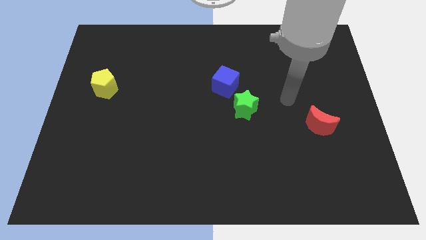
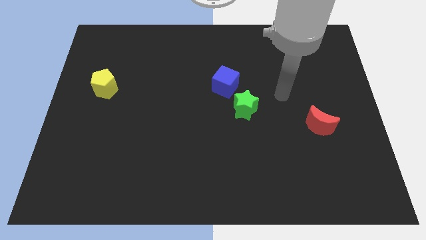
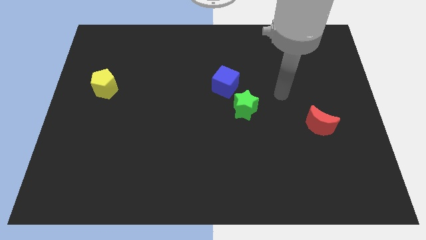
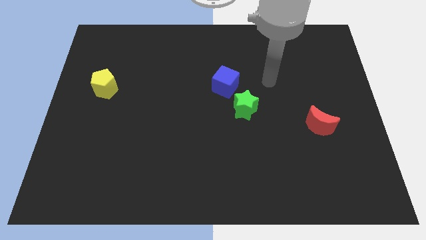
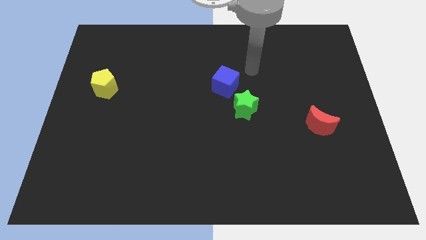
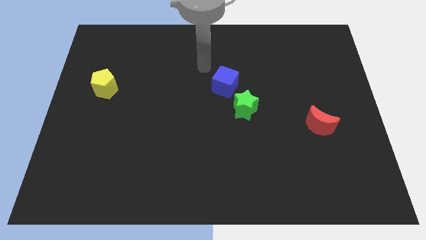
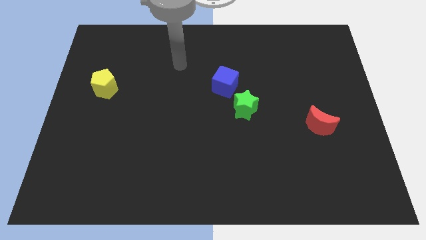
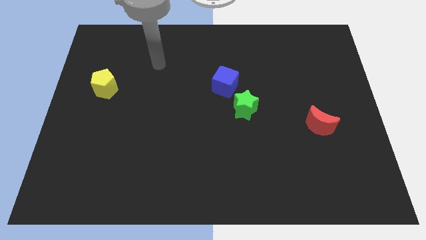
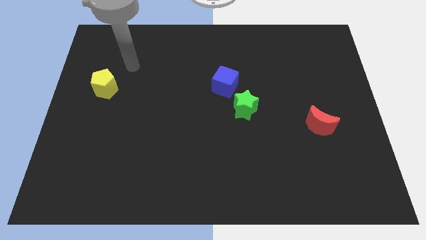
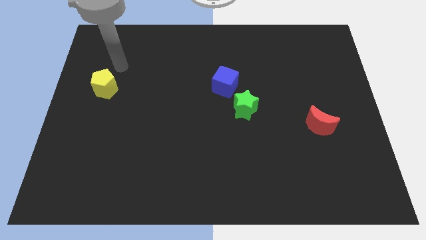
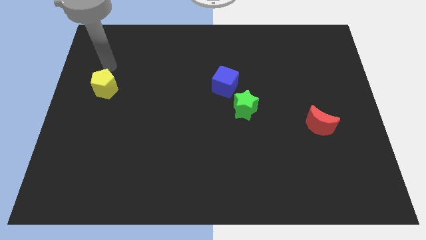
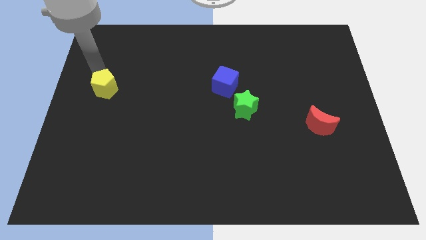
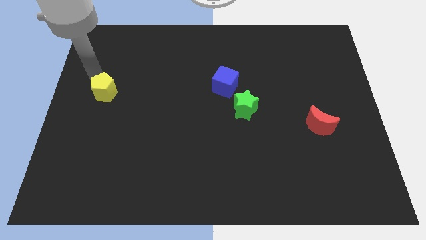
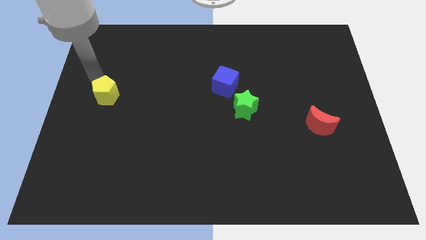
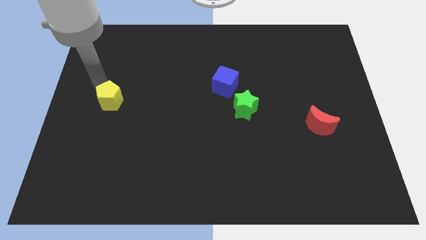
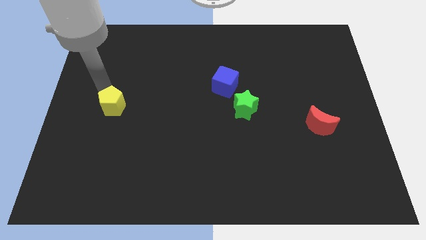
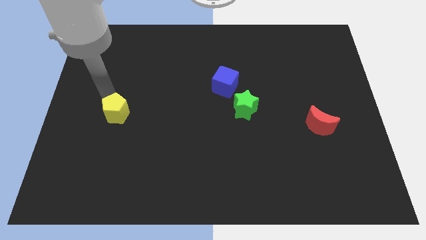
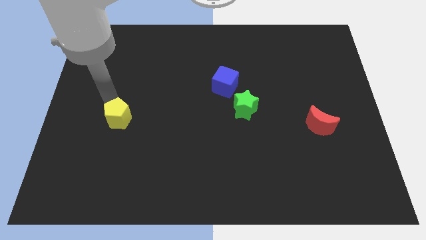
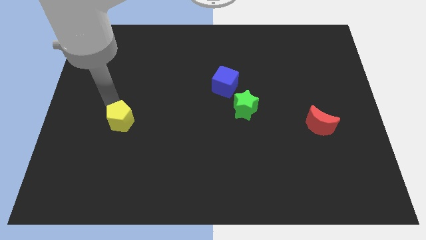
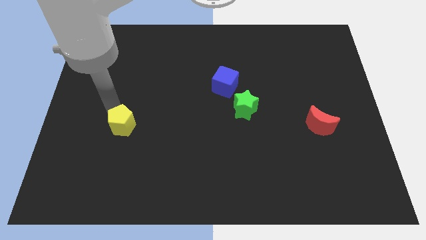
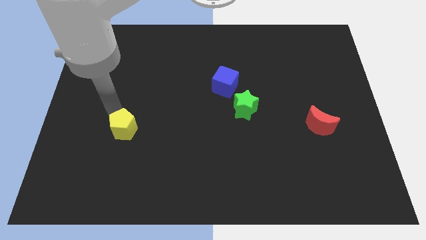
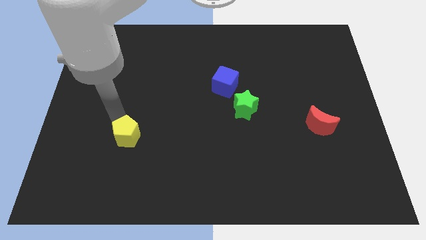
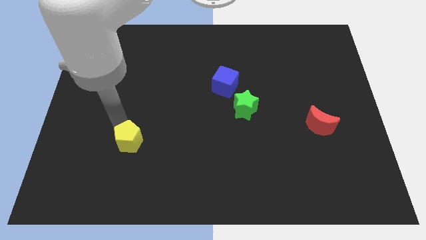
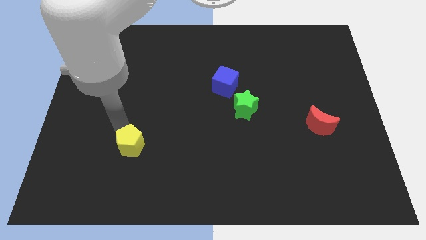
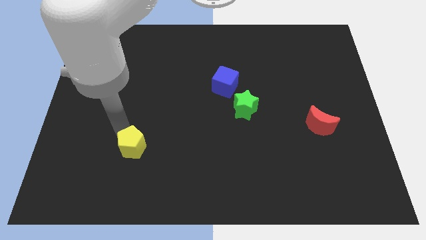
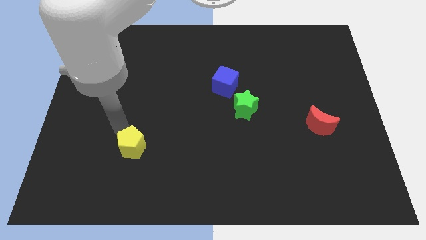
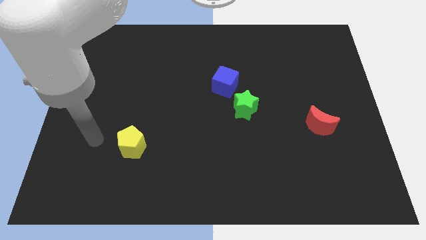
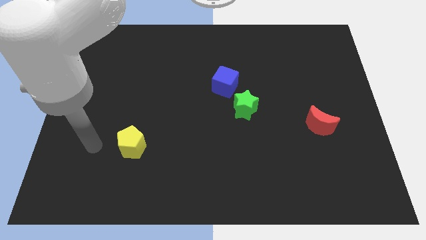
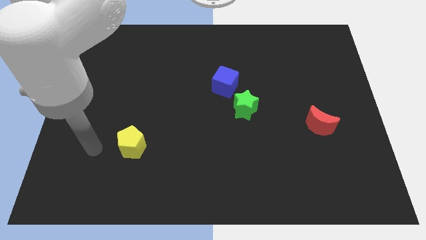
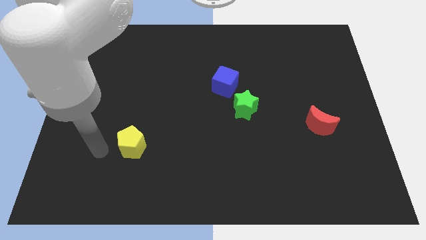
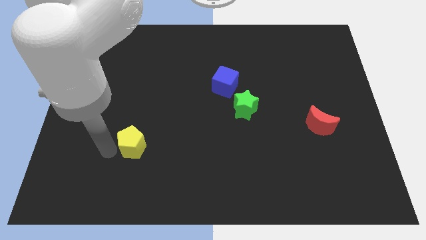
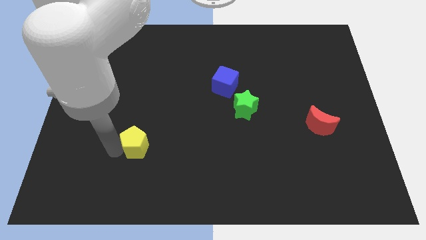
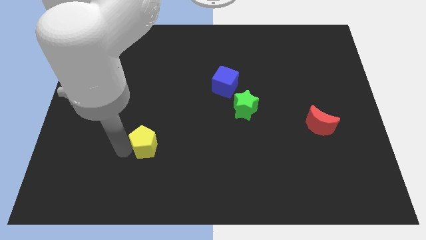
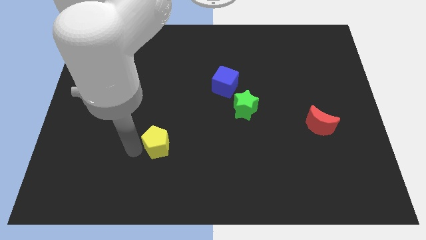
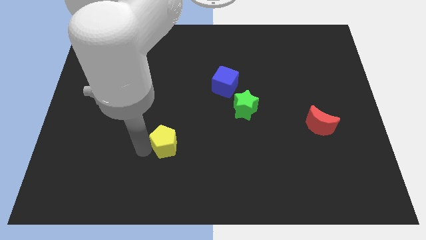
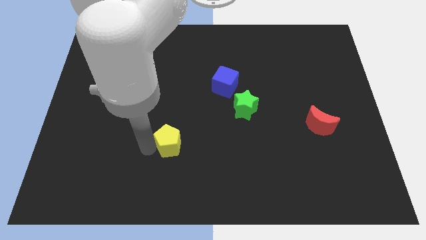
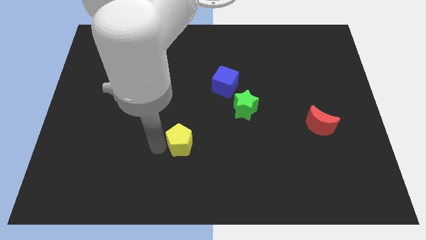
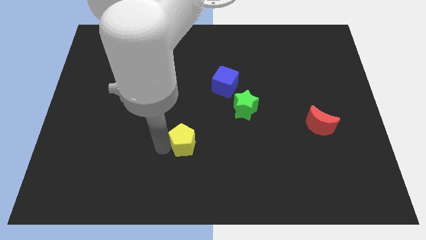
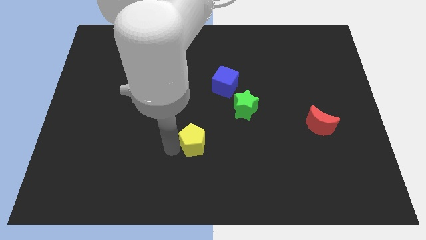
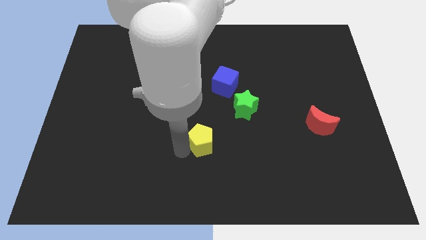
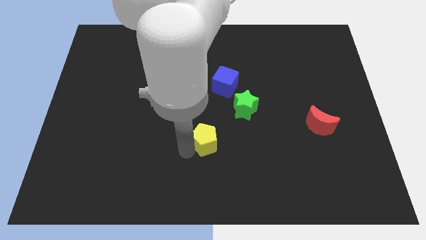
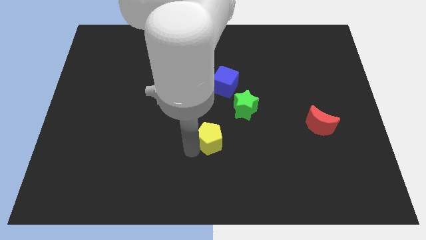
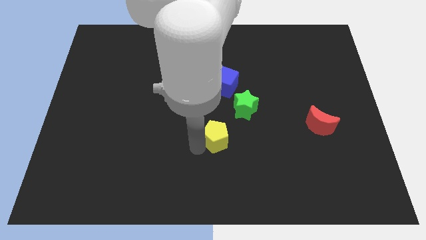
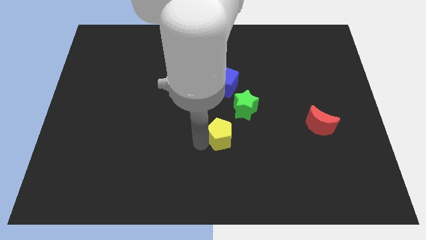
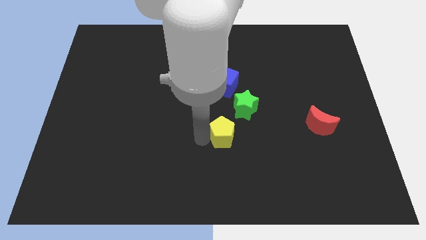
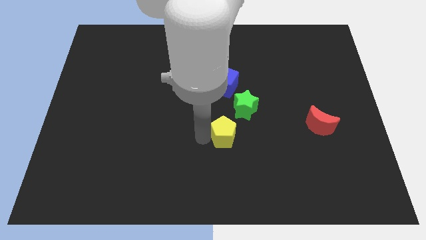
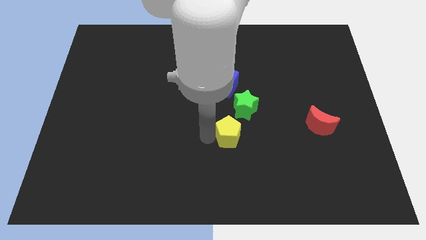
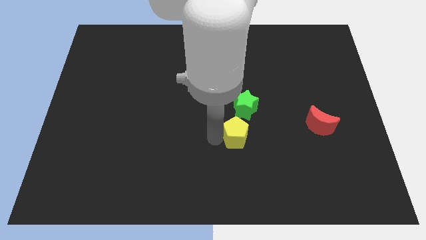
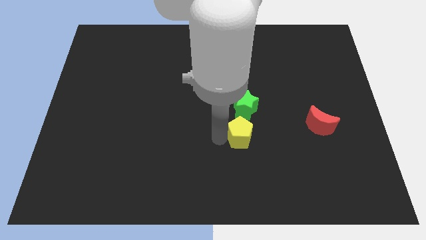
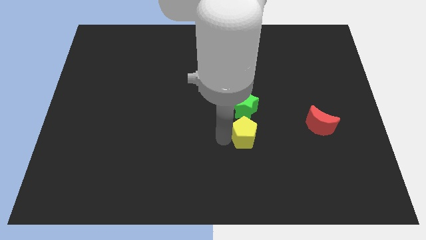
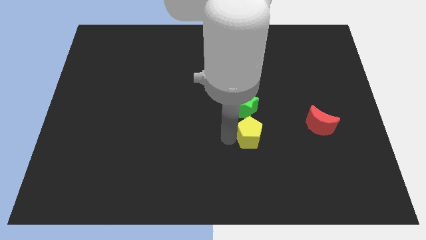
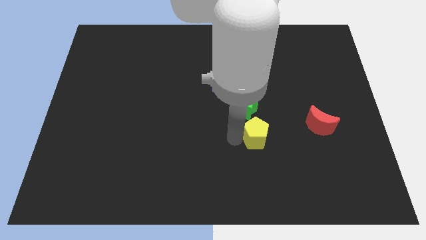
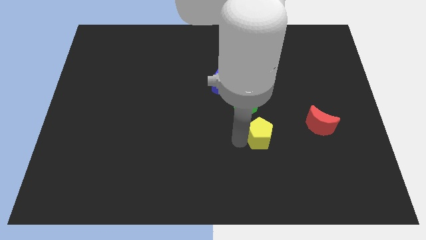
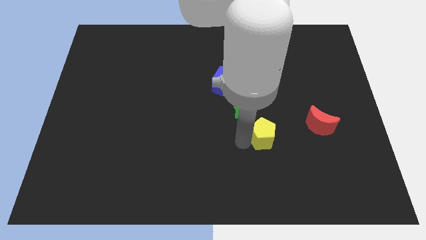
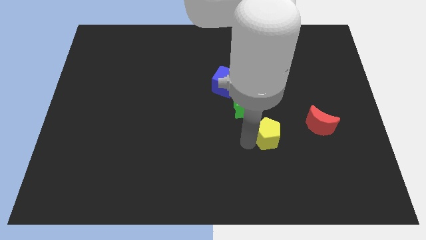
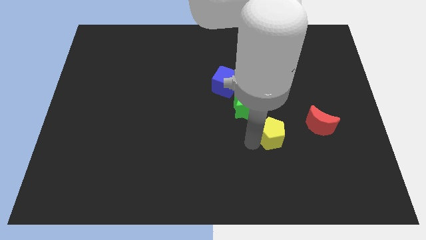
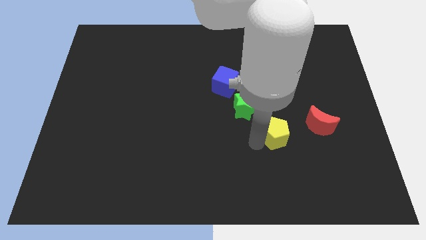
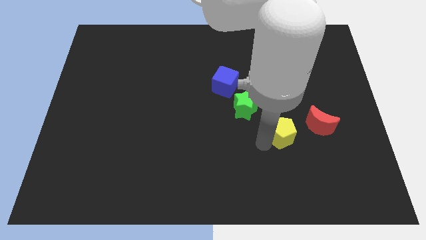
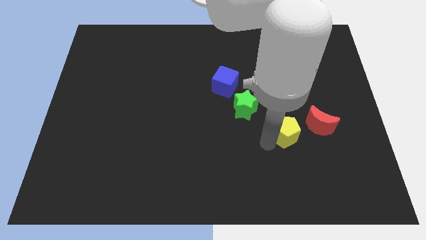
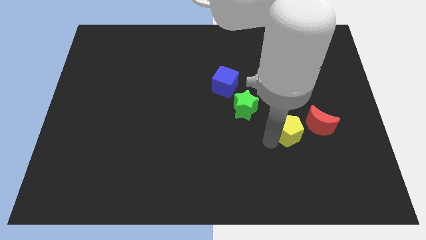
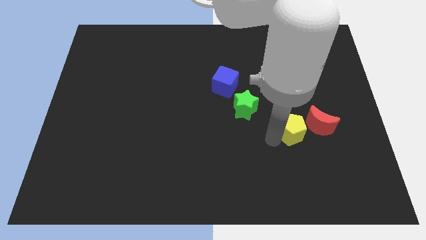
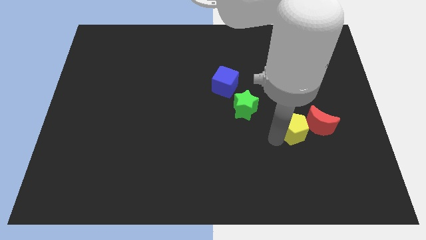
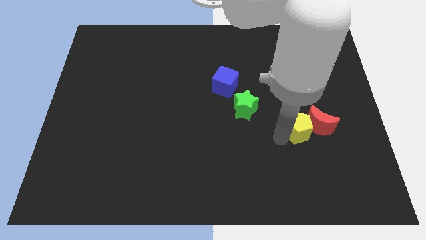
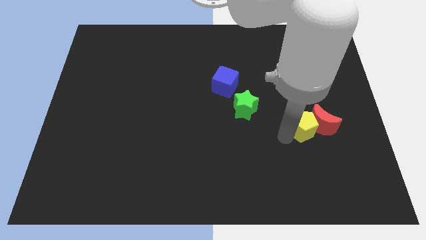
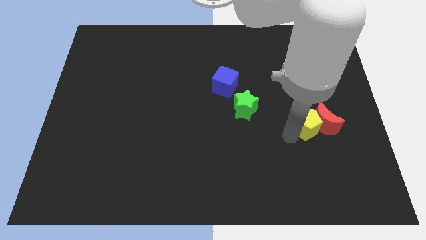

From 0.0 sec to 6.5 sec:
push the pentagon next to the red moon

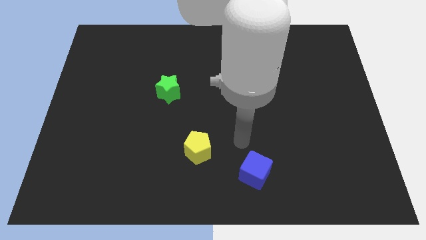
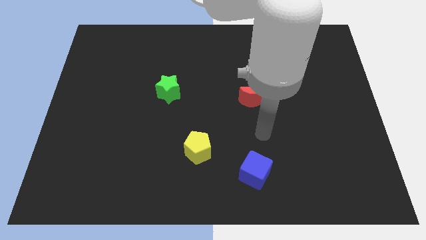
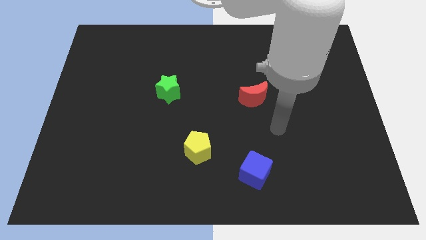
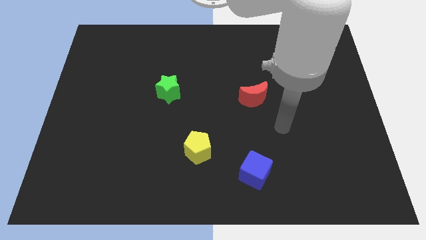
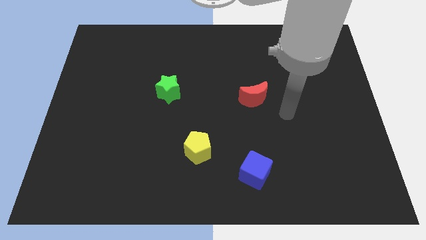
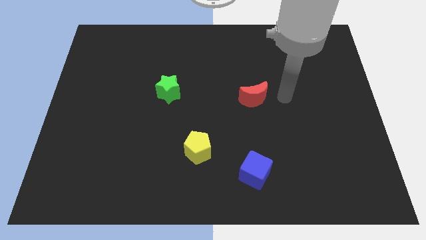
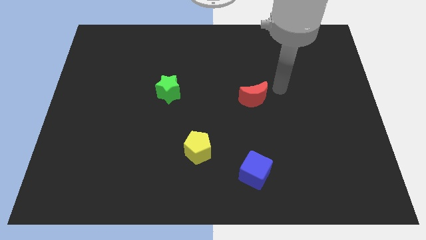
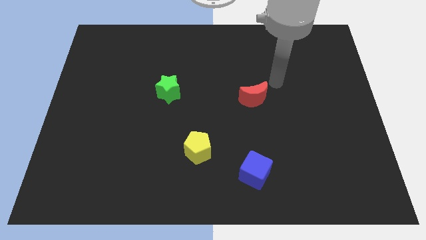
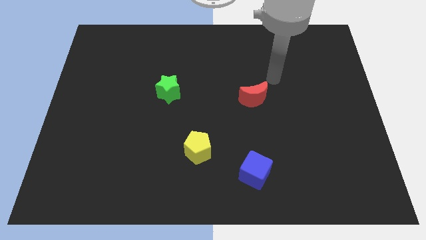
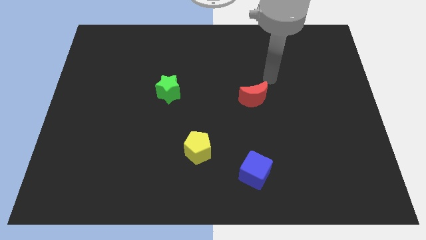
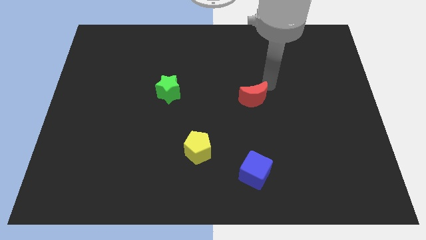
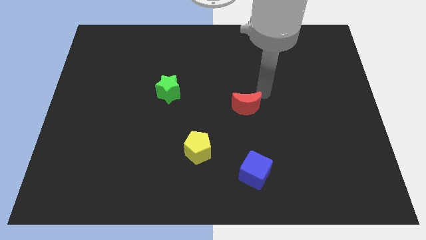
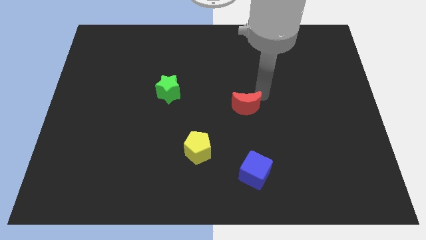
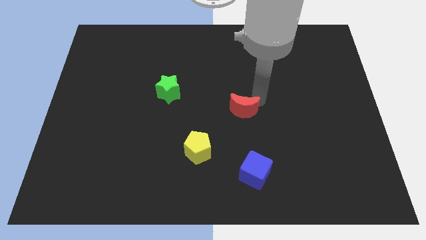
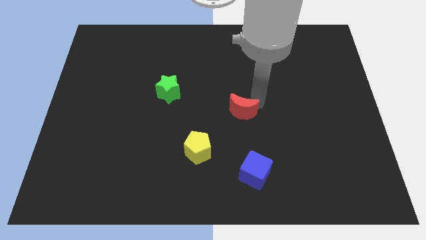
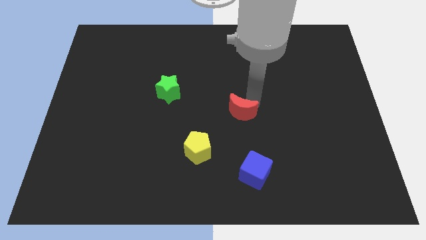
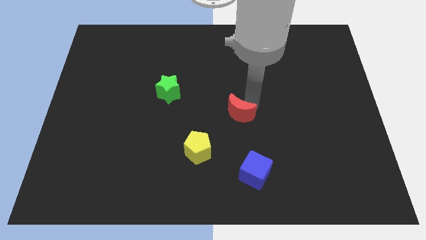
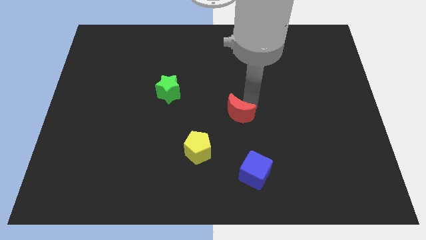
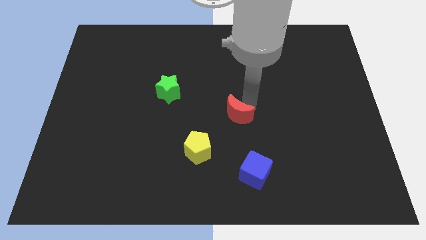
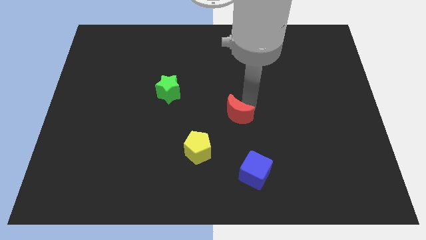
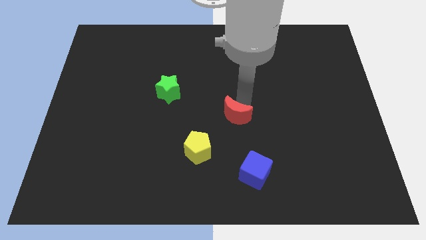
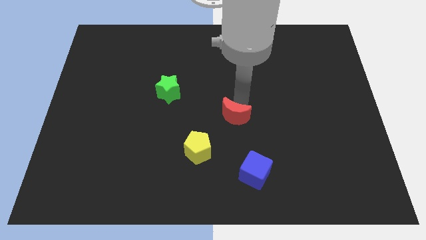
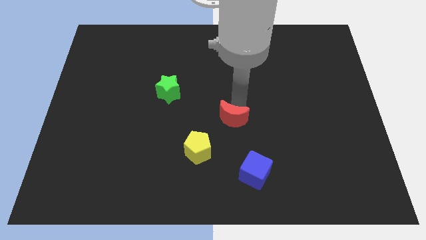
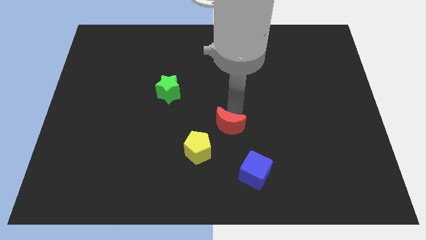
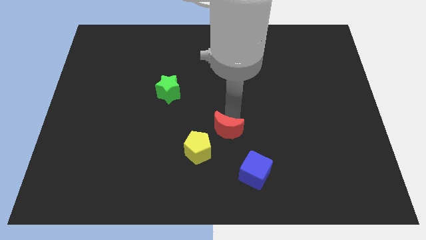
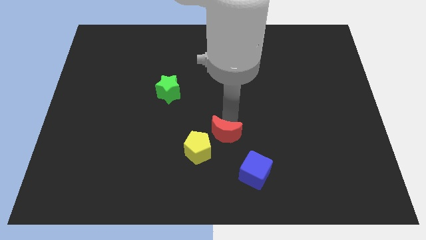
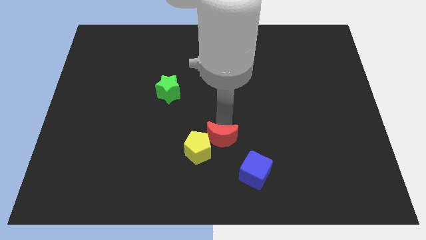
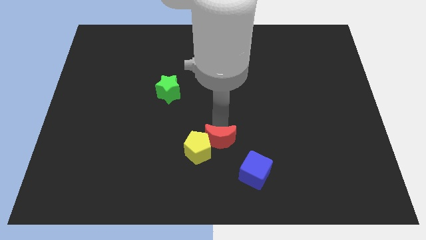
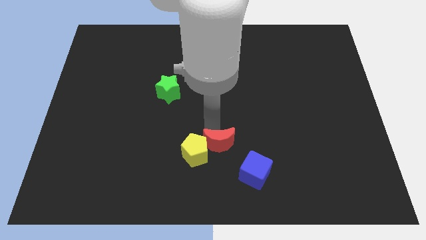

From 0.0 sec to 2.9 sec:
move the red block towards the yellow pentagon
